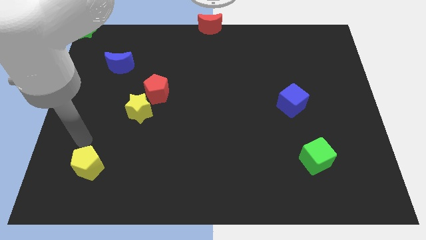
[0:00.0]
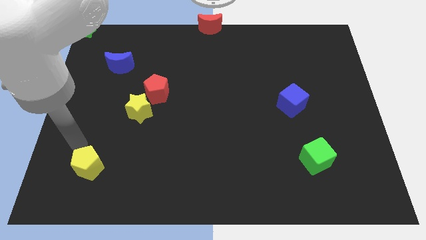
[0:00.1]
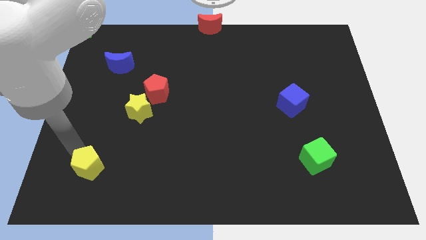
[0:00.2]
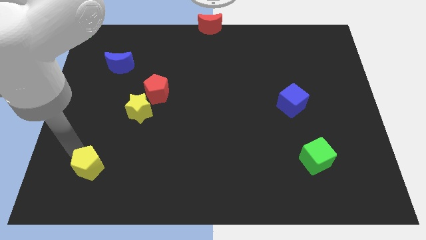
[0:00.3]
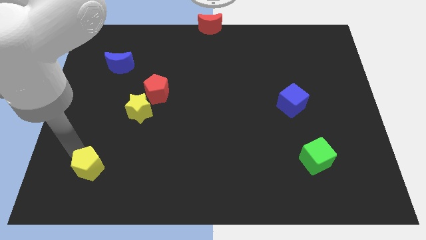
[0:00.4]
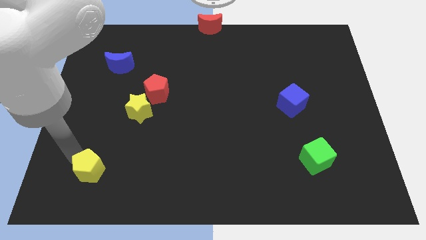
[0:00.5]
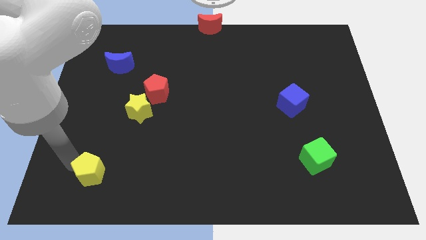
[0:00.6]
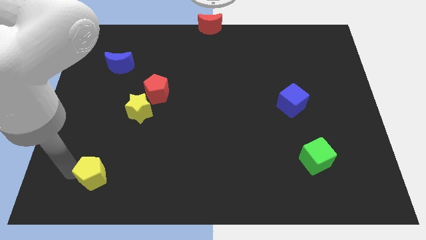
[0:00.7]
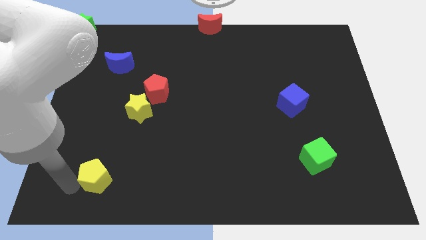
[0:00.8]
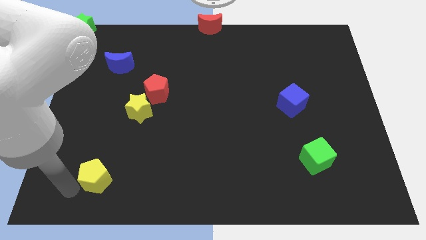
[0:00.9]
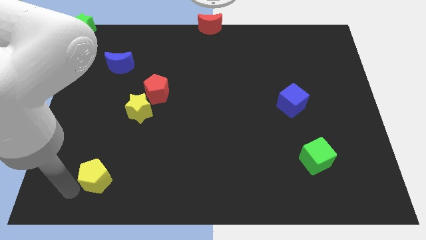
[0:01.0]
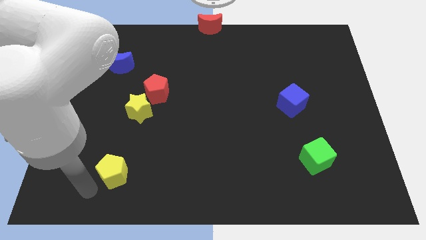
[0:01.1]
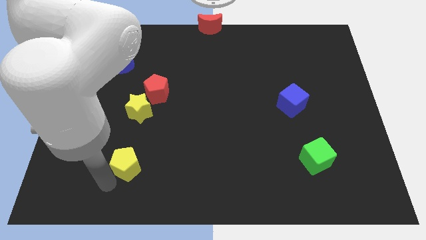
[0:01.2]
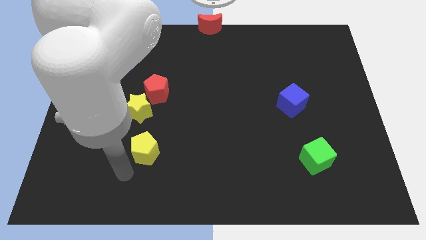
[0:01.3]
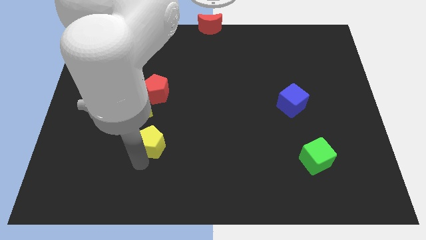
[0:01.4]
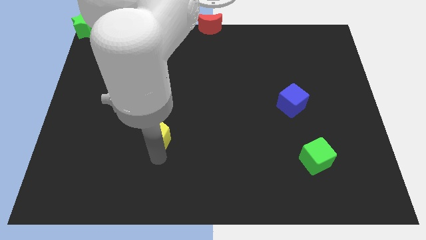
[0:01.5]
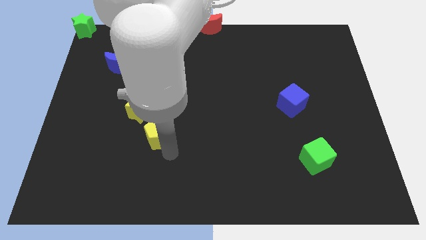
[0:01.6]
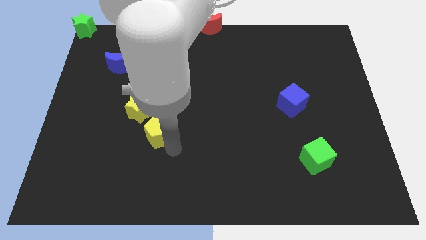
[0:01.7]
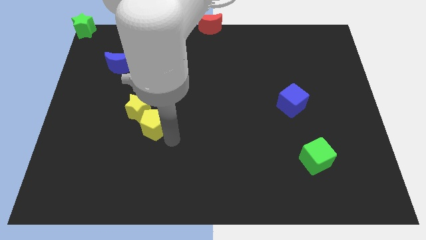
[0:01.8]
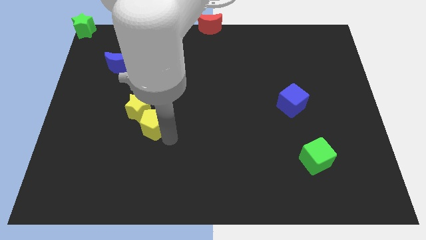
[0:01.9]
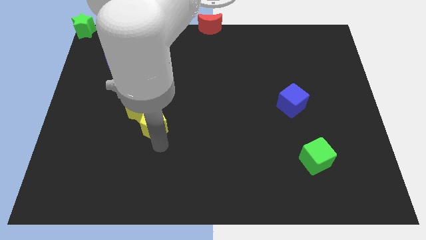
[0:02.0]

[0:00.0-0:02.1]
move yellow pentagon close to the yellow star

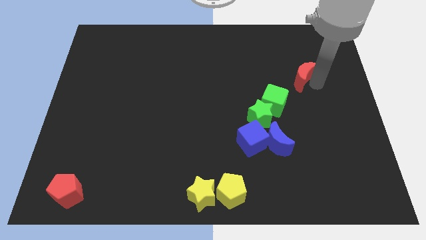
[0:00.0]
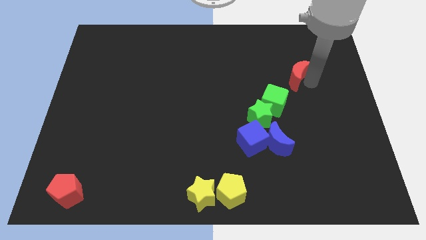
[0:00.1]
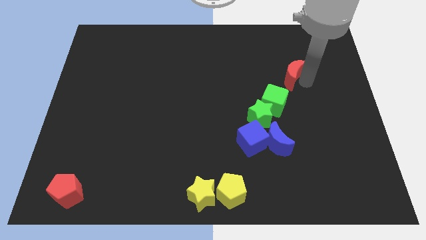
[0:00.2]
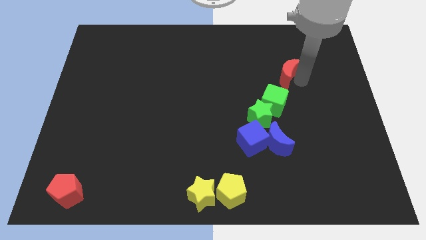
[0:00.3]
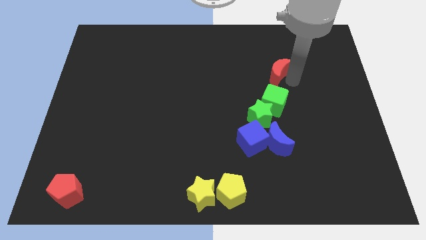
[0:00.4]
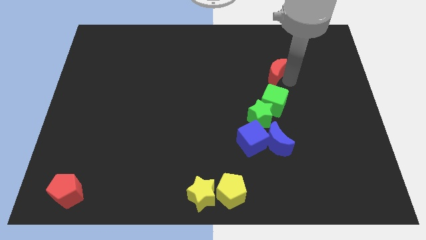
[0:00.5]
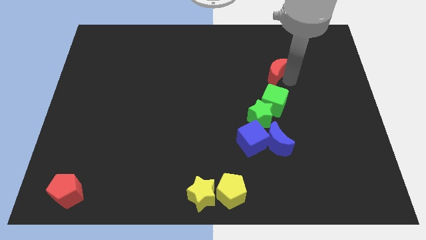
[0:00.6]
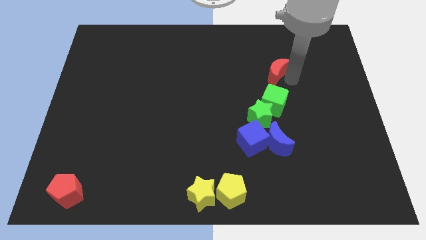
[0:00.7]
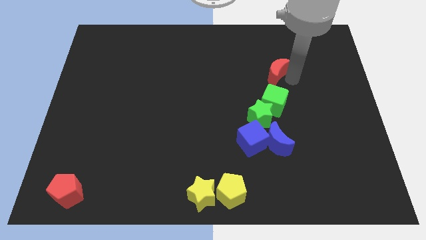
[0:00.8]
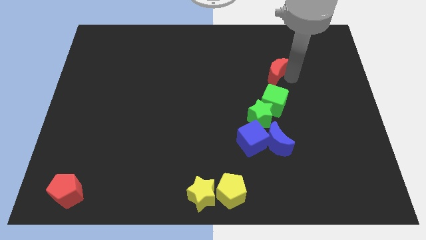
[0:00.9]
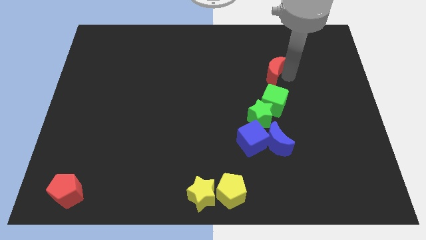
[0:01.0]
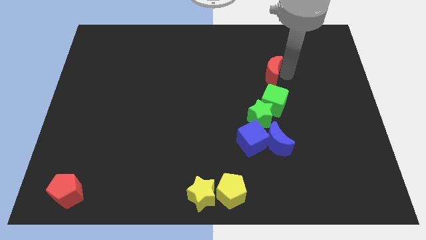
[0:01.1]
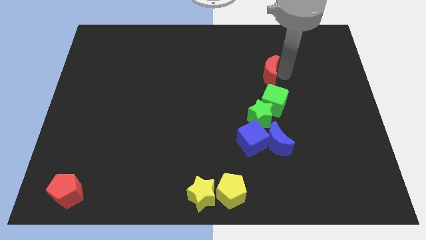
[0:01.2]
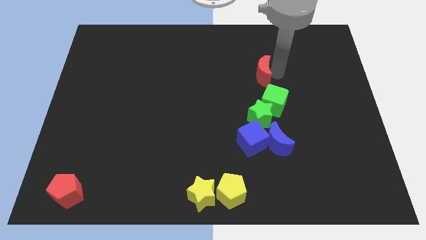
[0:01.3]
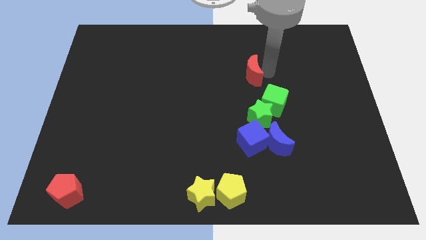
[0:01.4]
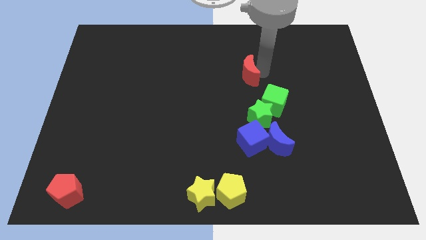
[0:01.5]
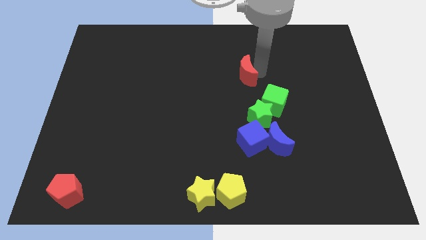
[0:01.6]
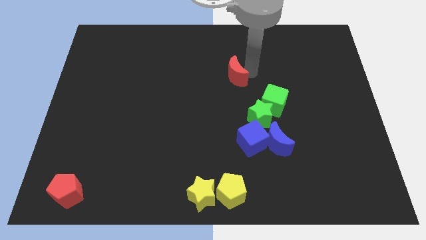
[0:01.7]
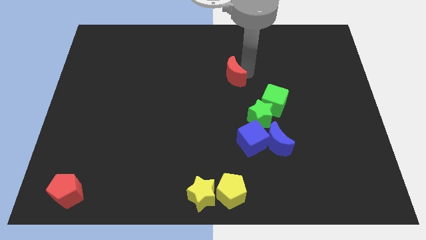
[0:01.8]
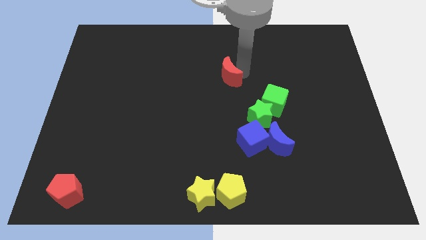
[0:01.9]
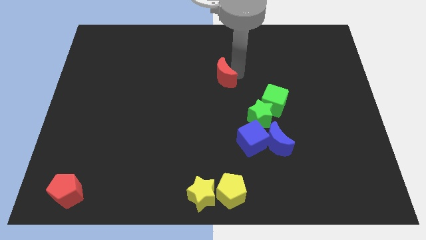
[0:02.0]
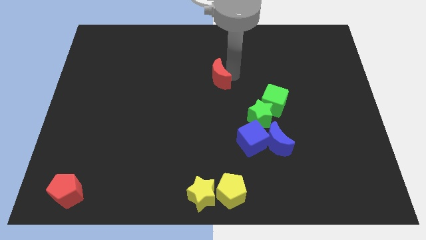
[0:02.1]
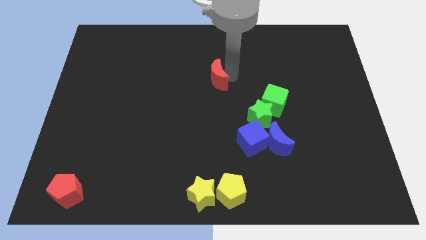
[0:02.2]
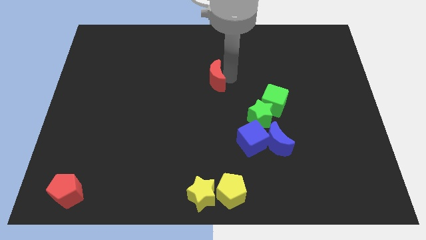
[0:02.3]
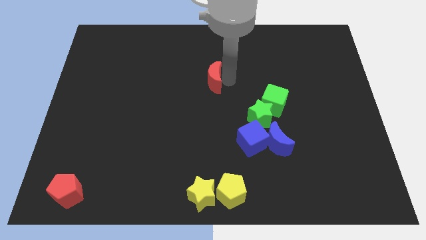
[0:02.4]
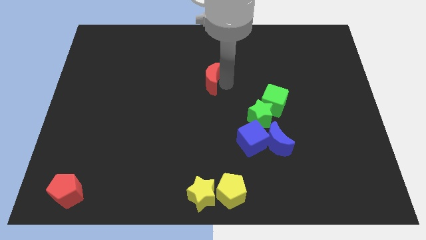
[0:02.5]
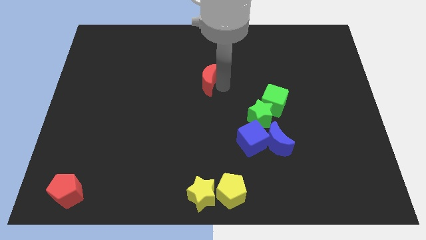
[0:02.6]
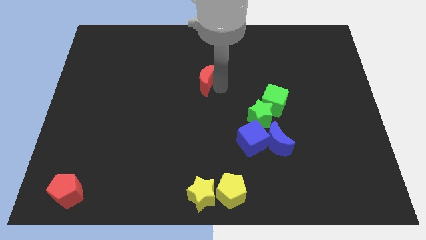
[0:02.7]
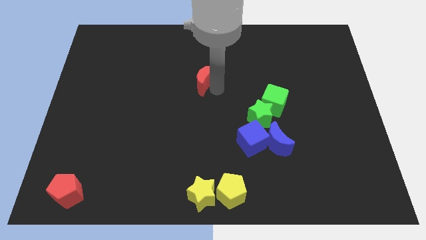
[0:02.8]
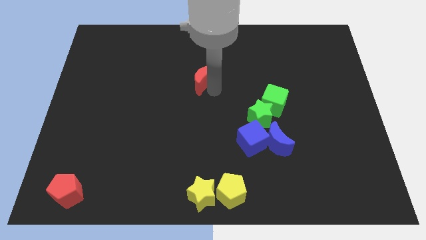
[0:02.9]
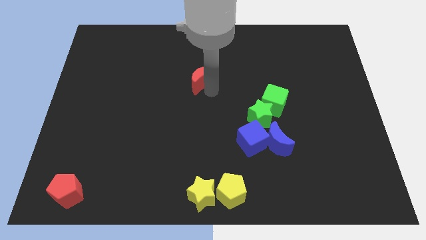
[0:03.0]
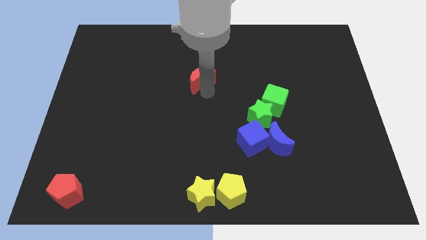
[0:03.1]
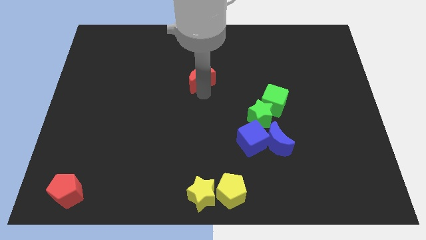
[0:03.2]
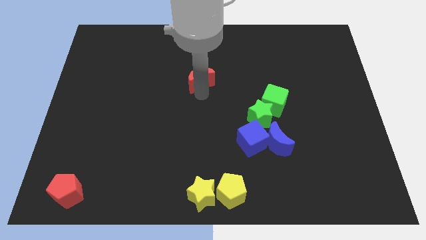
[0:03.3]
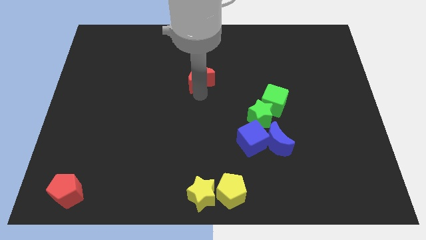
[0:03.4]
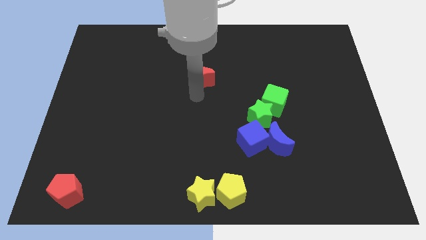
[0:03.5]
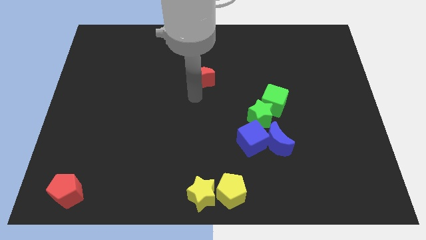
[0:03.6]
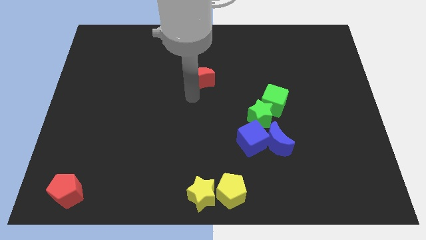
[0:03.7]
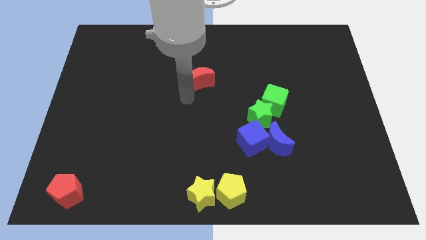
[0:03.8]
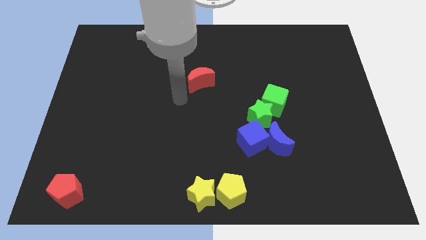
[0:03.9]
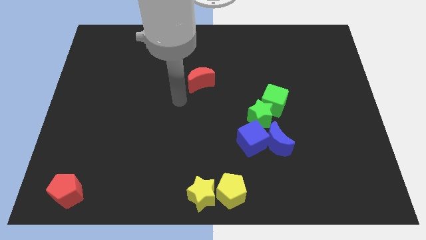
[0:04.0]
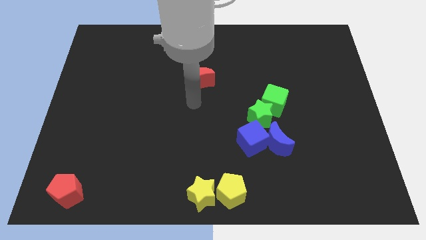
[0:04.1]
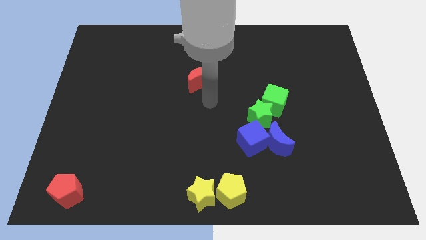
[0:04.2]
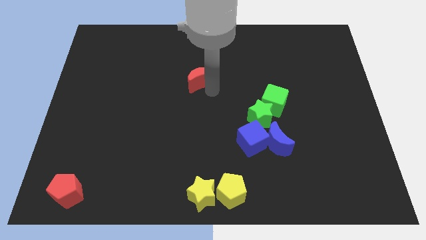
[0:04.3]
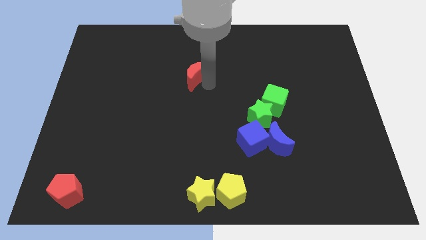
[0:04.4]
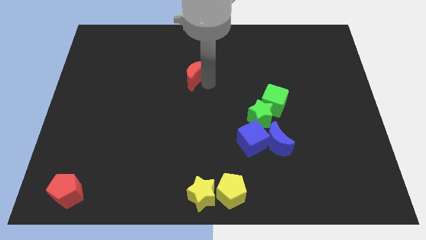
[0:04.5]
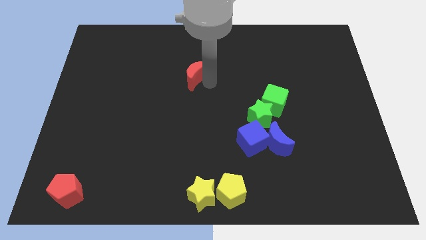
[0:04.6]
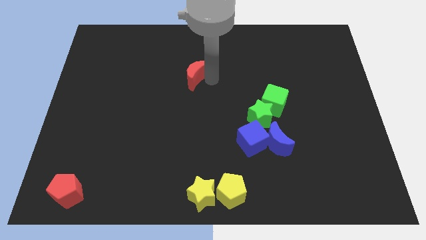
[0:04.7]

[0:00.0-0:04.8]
push the red moon to the left of the board

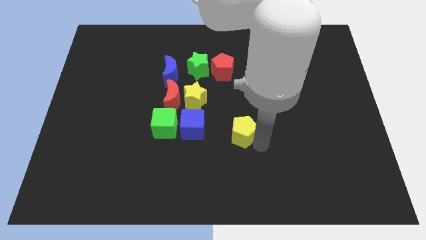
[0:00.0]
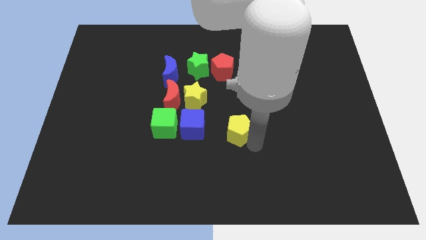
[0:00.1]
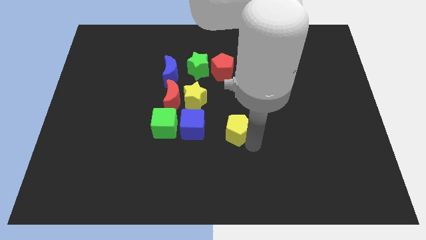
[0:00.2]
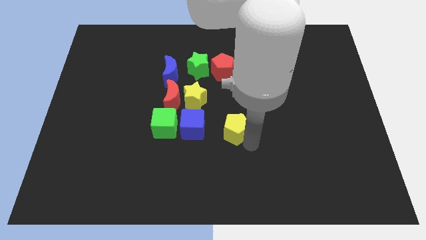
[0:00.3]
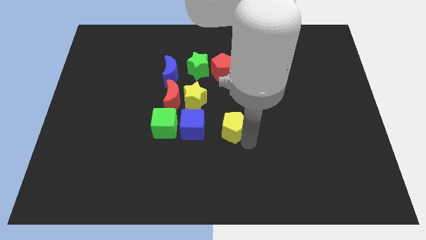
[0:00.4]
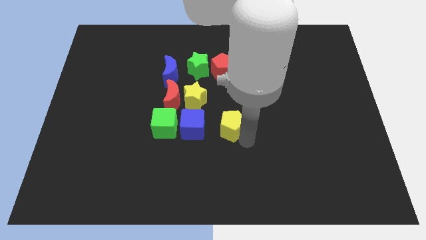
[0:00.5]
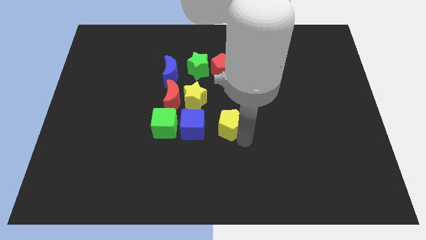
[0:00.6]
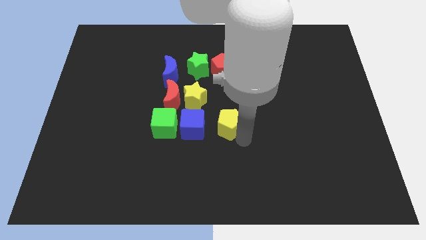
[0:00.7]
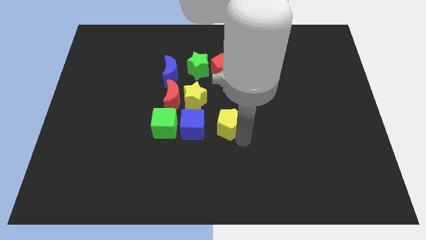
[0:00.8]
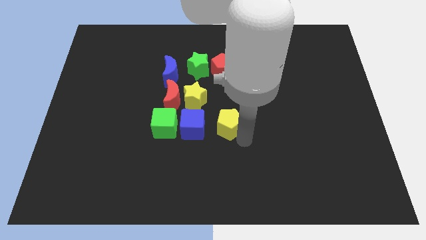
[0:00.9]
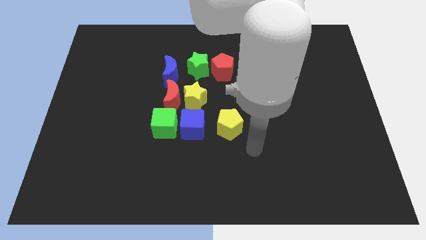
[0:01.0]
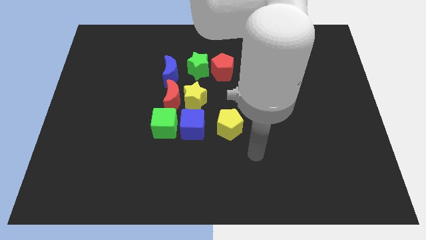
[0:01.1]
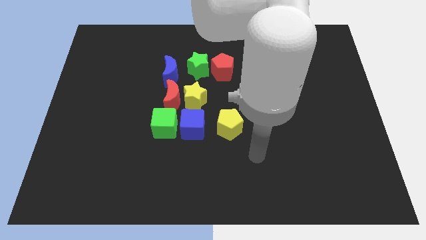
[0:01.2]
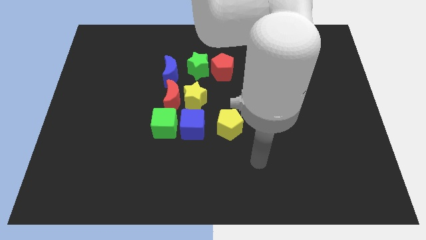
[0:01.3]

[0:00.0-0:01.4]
move the yellow pentagon diagonally bottom right to the yellow star

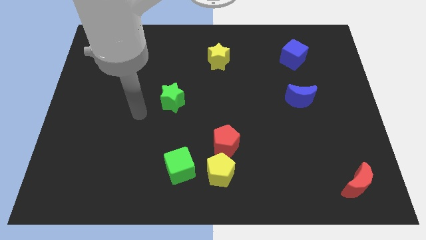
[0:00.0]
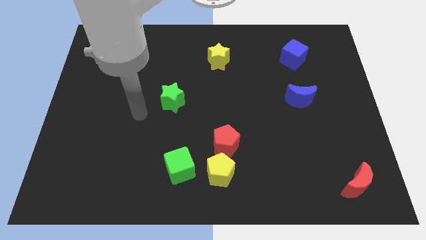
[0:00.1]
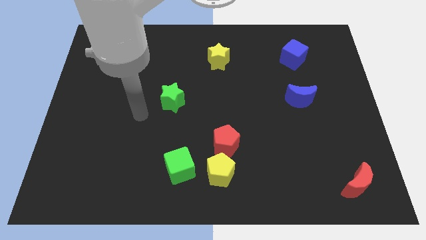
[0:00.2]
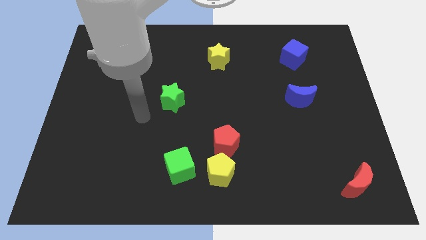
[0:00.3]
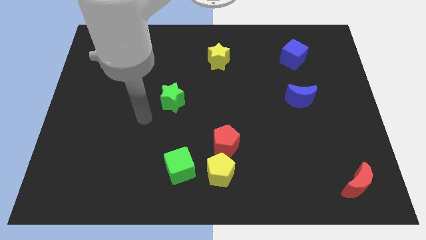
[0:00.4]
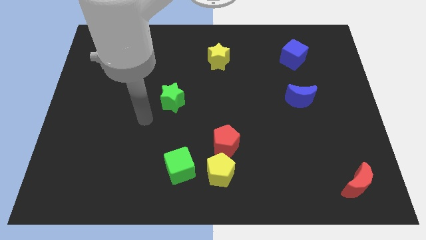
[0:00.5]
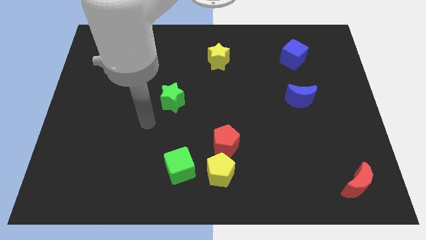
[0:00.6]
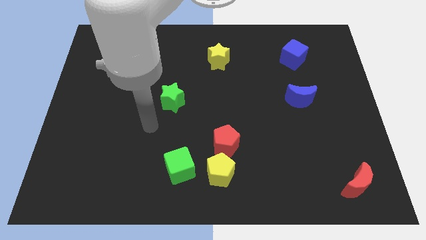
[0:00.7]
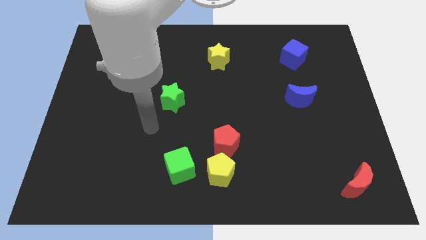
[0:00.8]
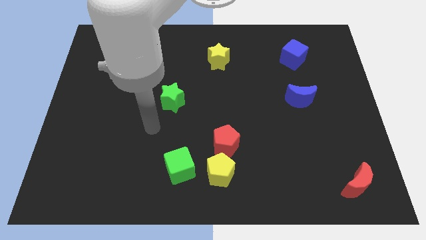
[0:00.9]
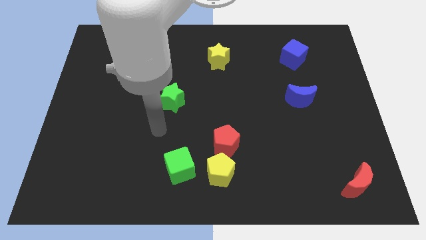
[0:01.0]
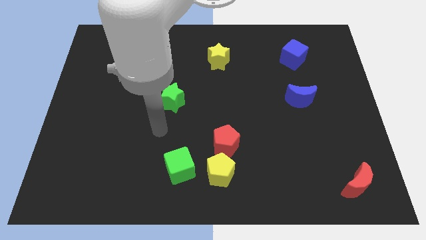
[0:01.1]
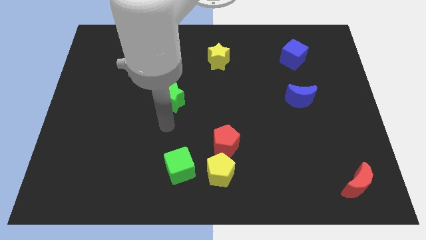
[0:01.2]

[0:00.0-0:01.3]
place your arm below the green star
